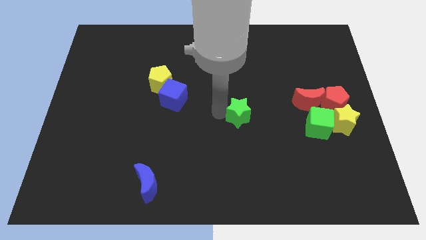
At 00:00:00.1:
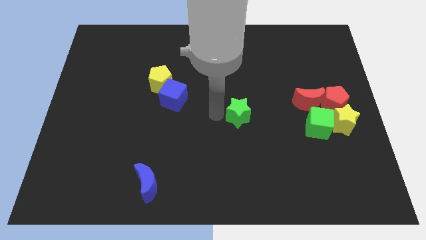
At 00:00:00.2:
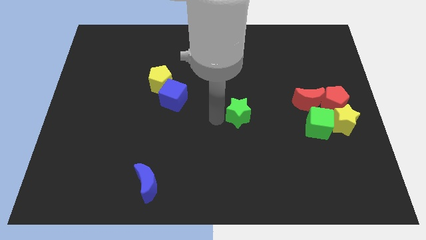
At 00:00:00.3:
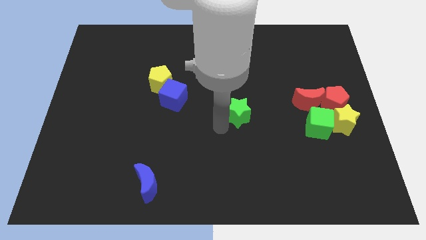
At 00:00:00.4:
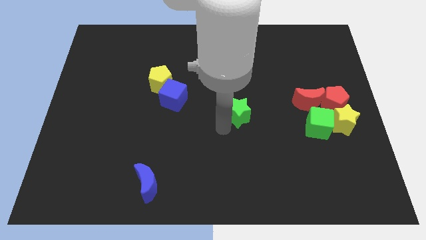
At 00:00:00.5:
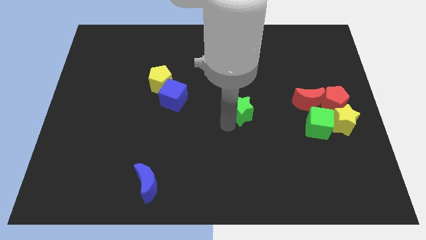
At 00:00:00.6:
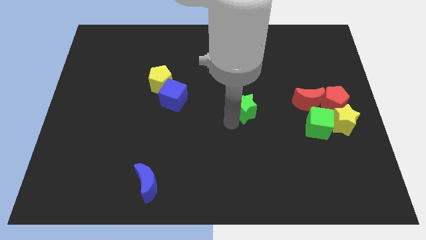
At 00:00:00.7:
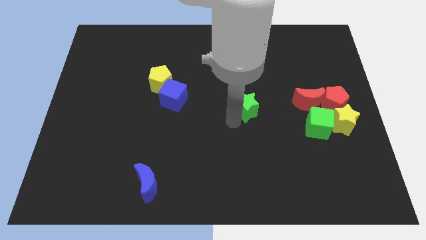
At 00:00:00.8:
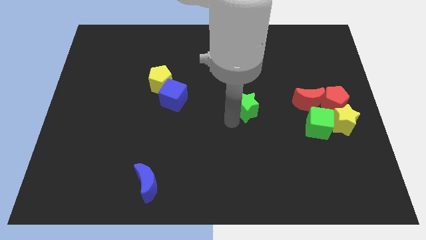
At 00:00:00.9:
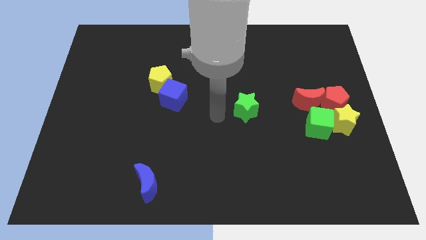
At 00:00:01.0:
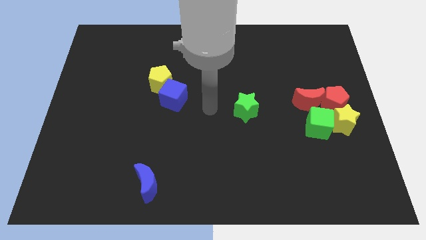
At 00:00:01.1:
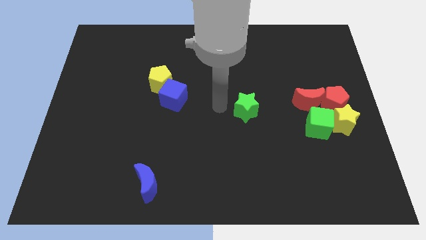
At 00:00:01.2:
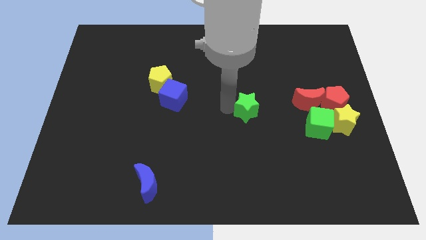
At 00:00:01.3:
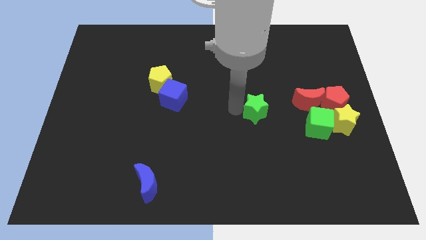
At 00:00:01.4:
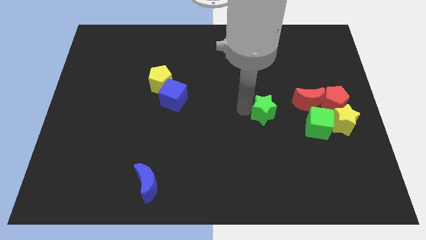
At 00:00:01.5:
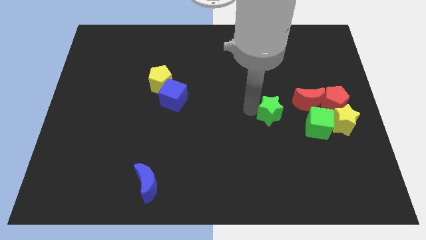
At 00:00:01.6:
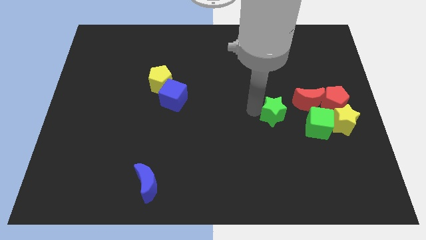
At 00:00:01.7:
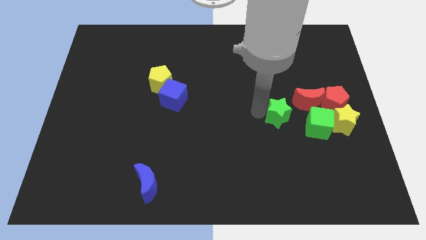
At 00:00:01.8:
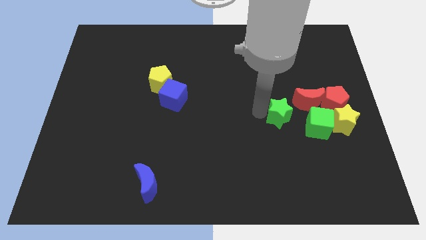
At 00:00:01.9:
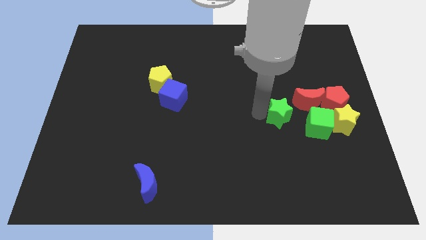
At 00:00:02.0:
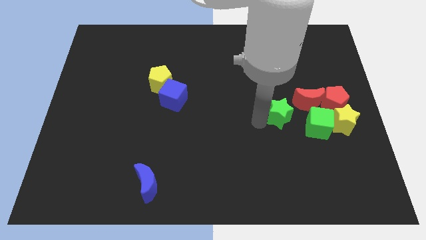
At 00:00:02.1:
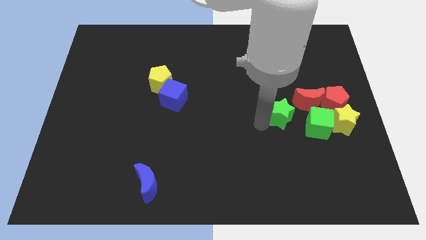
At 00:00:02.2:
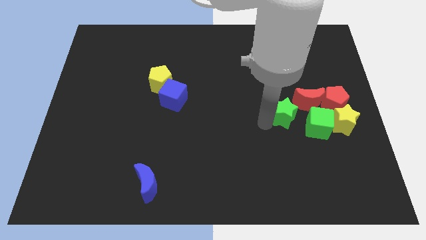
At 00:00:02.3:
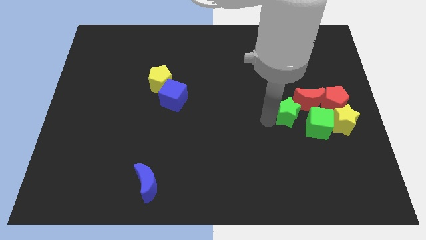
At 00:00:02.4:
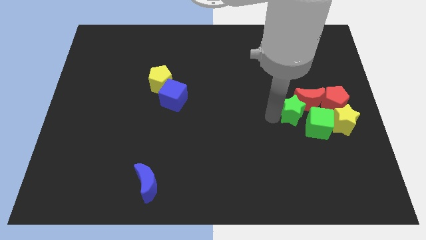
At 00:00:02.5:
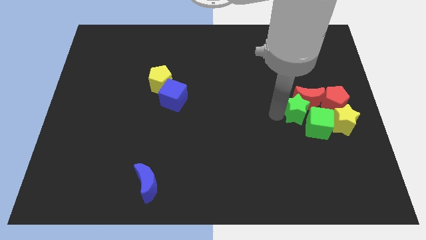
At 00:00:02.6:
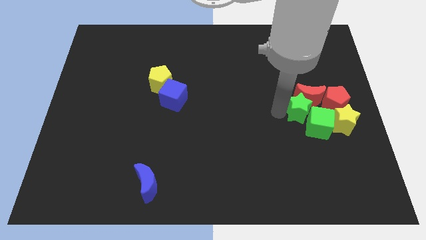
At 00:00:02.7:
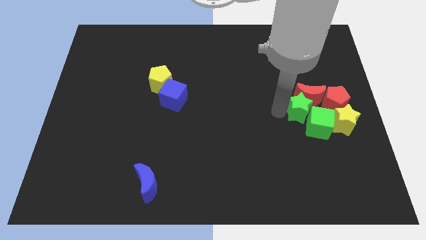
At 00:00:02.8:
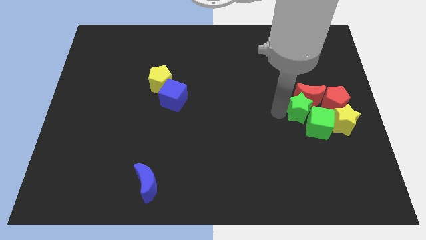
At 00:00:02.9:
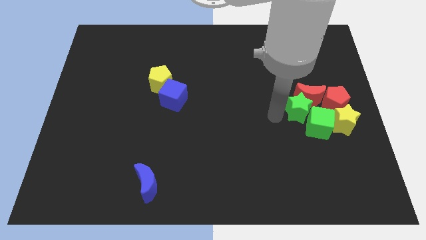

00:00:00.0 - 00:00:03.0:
push the green star into the red moon

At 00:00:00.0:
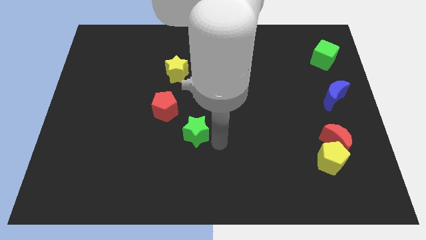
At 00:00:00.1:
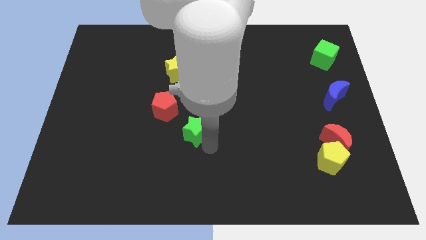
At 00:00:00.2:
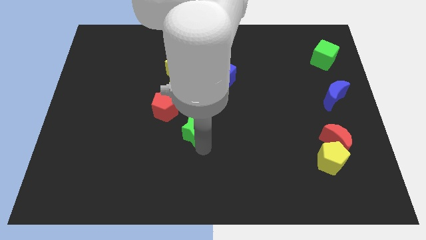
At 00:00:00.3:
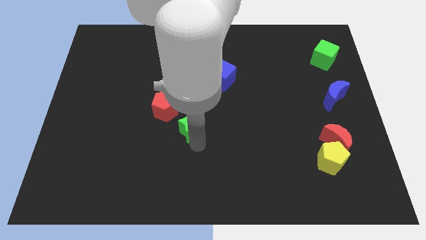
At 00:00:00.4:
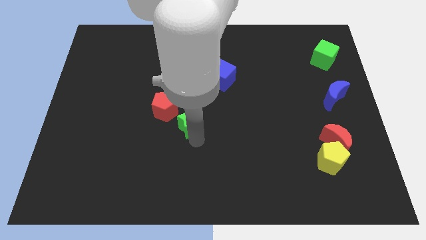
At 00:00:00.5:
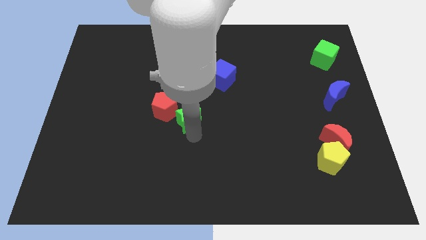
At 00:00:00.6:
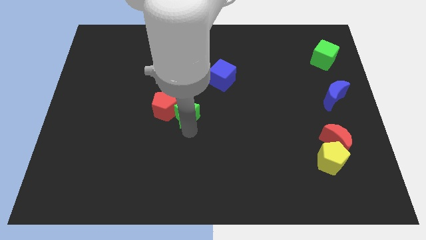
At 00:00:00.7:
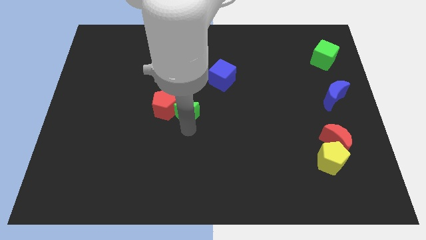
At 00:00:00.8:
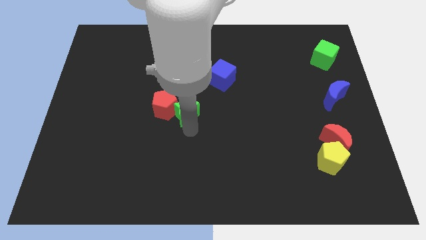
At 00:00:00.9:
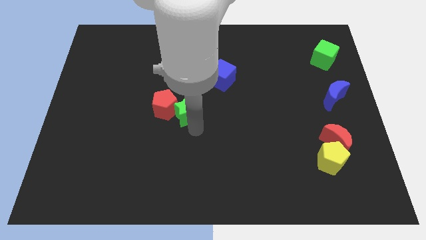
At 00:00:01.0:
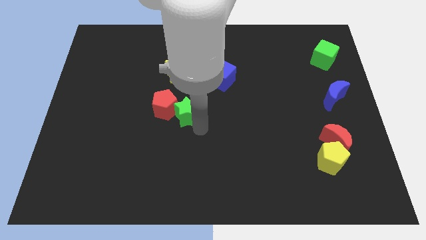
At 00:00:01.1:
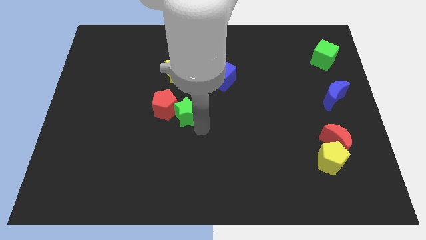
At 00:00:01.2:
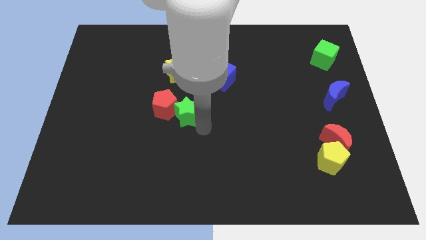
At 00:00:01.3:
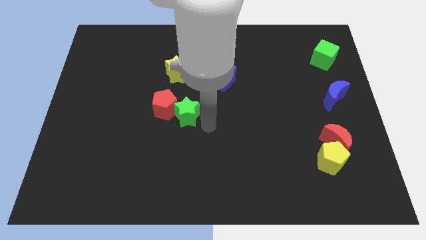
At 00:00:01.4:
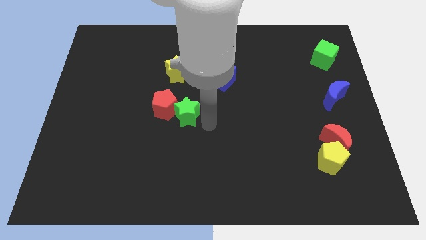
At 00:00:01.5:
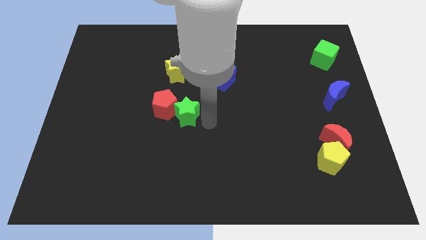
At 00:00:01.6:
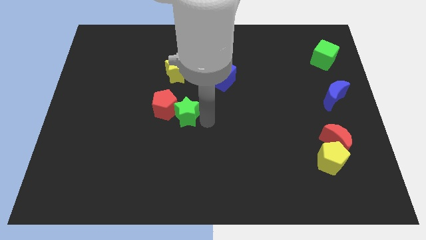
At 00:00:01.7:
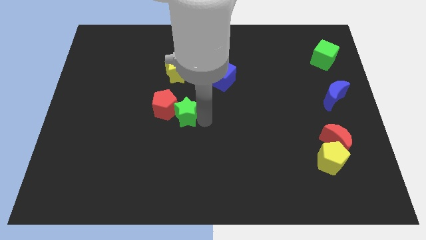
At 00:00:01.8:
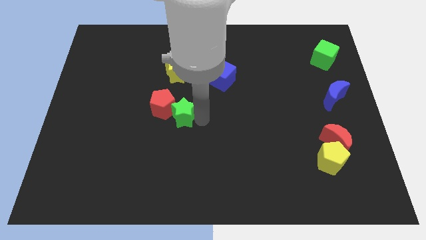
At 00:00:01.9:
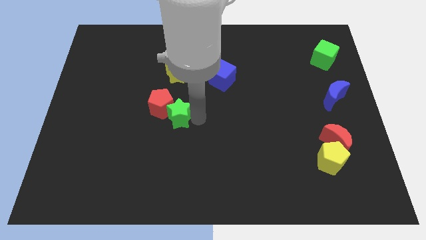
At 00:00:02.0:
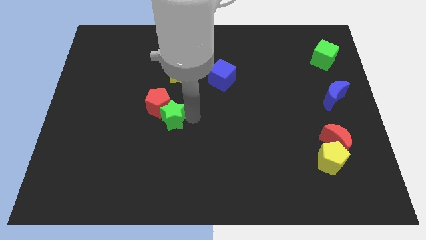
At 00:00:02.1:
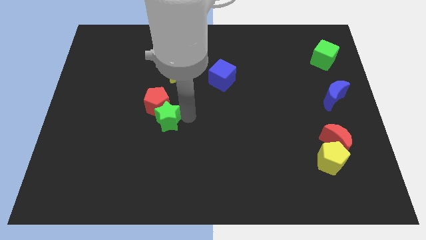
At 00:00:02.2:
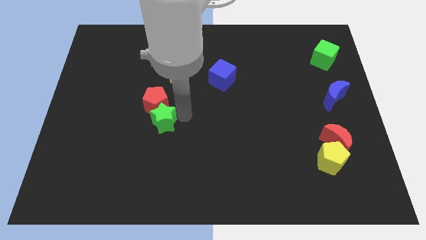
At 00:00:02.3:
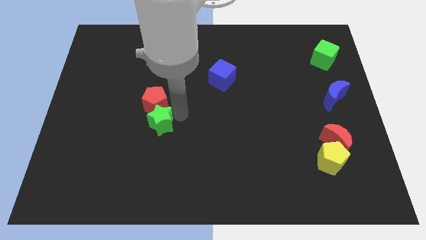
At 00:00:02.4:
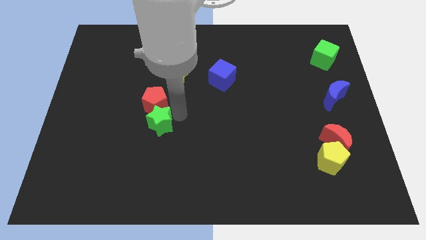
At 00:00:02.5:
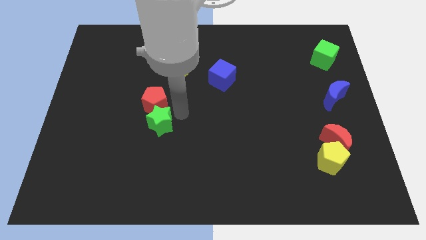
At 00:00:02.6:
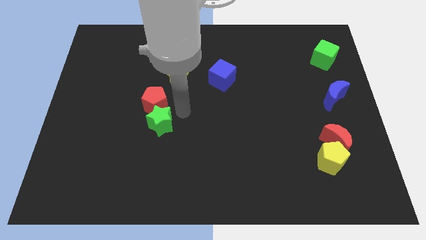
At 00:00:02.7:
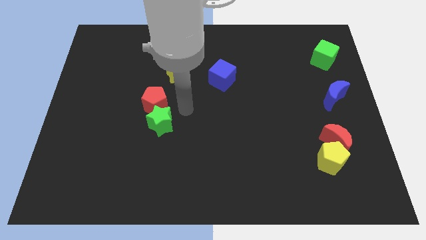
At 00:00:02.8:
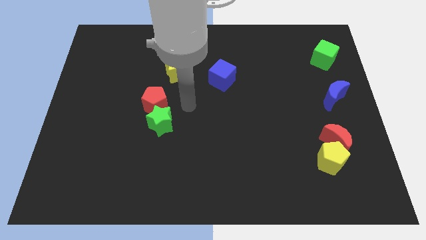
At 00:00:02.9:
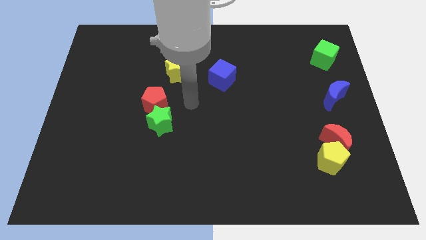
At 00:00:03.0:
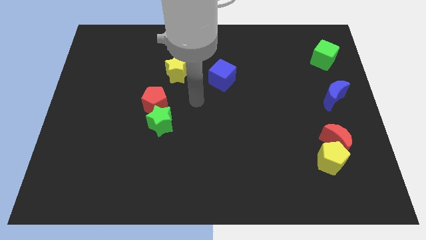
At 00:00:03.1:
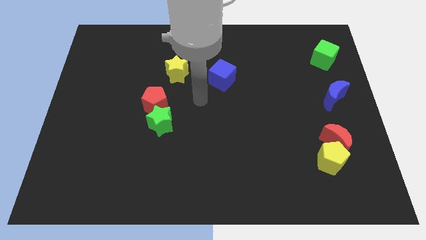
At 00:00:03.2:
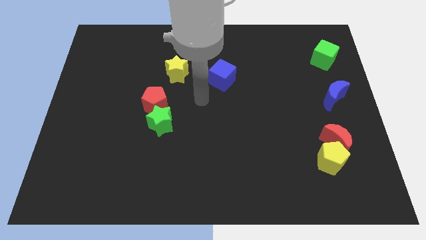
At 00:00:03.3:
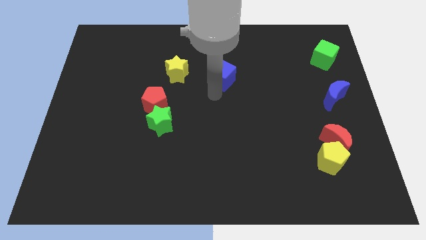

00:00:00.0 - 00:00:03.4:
push the green star and red pentagon slightly to the left side of the board

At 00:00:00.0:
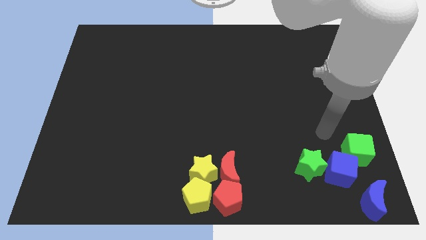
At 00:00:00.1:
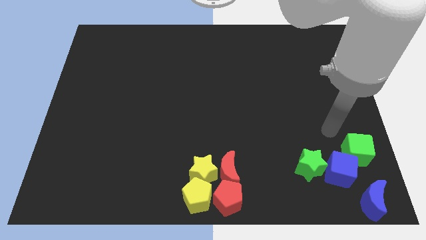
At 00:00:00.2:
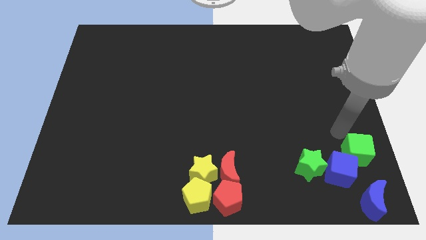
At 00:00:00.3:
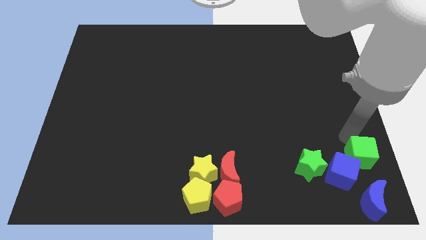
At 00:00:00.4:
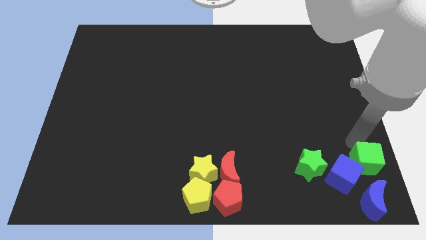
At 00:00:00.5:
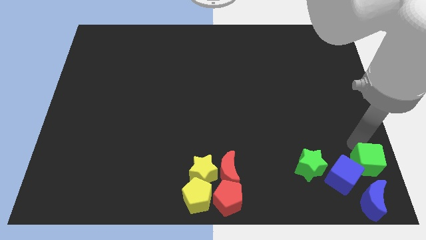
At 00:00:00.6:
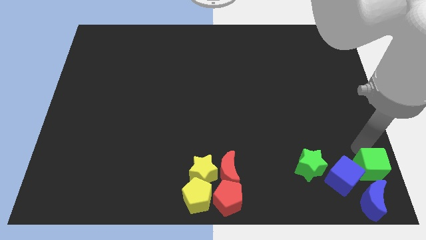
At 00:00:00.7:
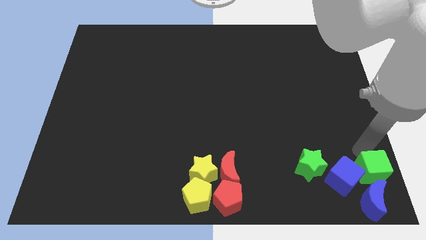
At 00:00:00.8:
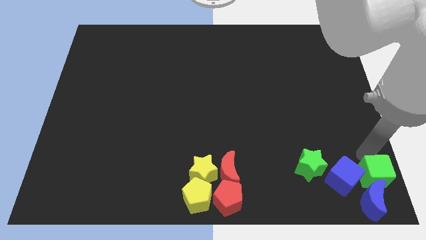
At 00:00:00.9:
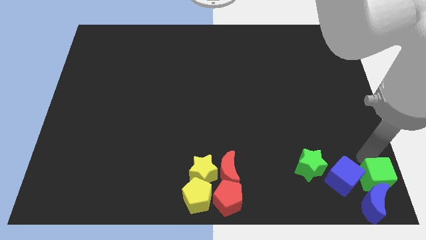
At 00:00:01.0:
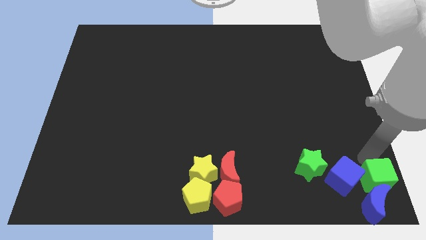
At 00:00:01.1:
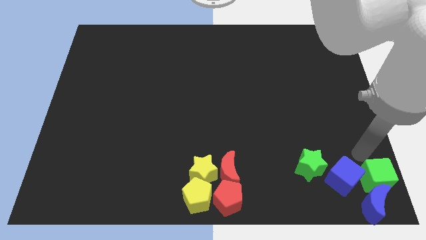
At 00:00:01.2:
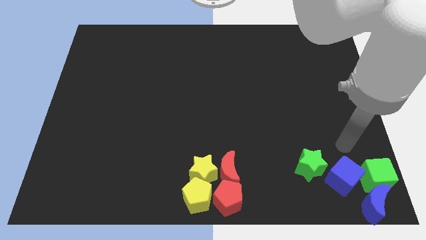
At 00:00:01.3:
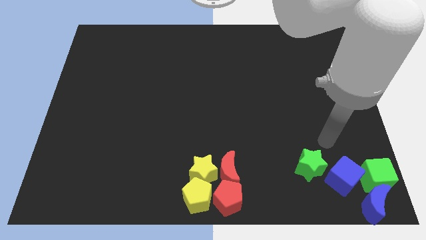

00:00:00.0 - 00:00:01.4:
move the green cube slightly to the blue moon

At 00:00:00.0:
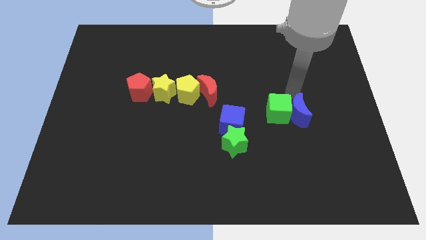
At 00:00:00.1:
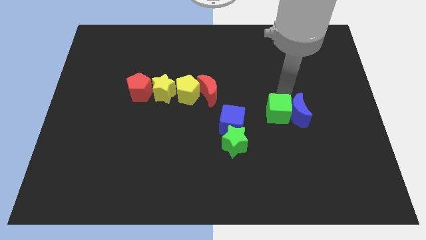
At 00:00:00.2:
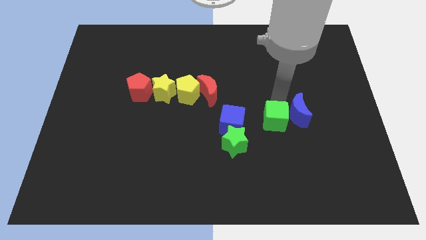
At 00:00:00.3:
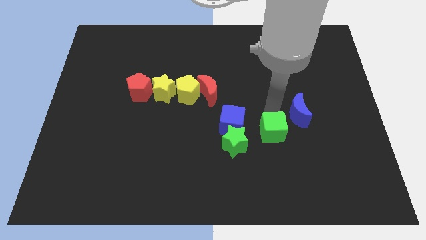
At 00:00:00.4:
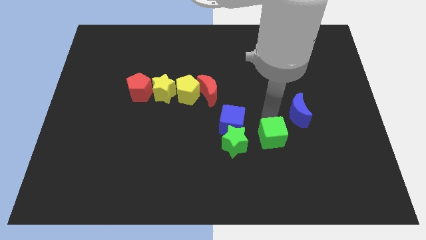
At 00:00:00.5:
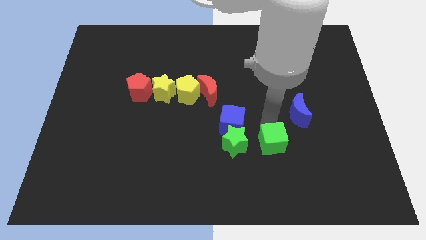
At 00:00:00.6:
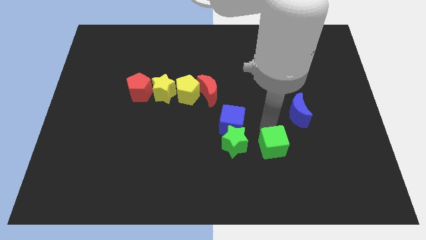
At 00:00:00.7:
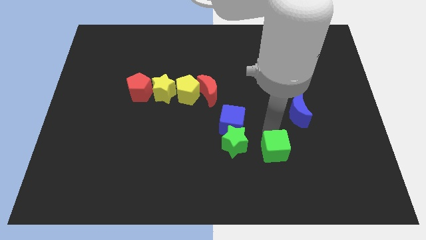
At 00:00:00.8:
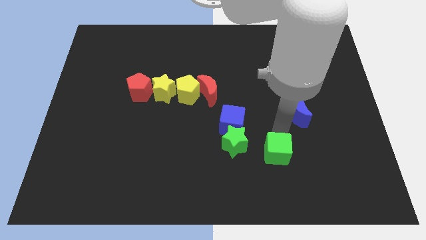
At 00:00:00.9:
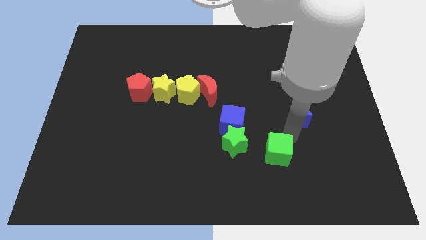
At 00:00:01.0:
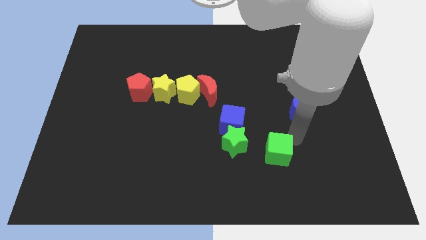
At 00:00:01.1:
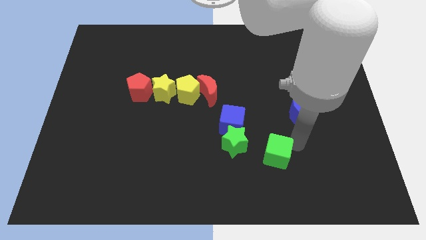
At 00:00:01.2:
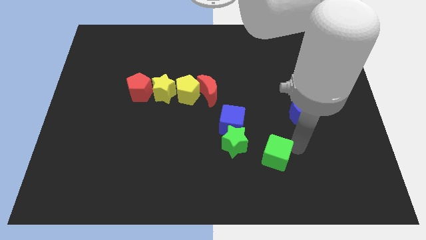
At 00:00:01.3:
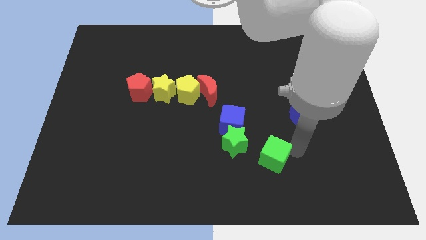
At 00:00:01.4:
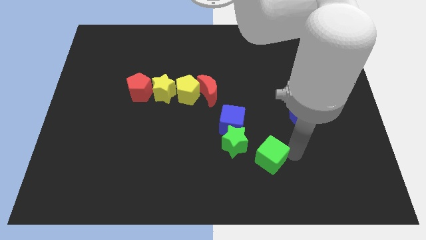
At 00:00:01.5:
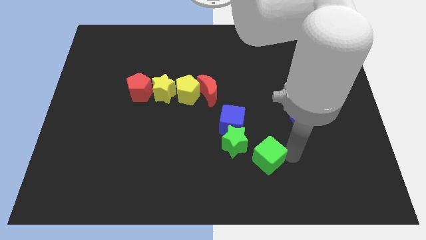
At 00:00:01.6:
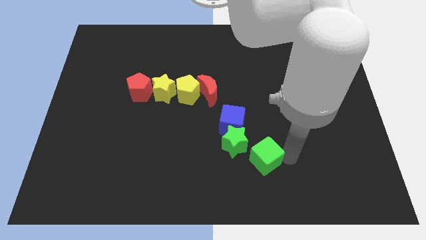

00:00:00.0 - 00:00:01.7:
separate the green cube from the blue crescent
